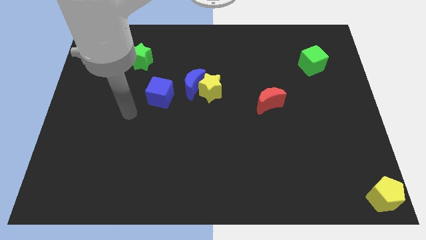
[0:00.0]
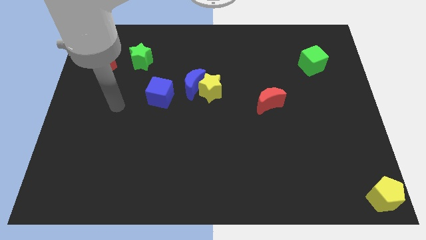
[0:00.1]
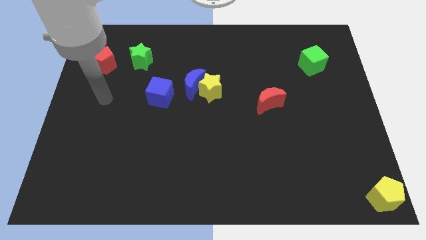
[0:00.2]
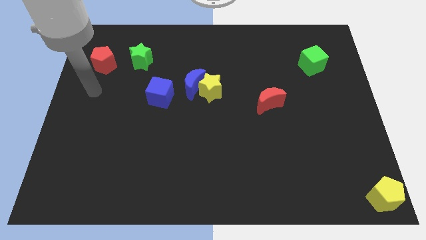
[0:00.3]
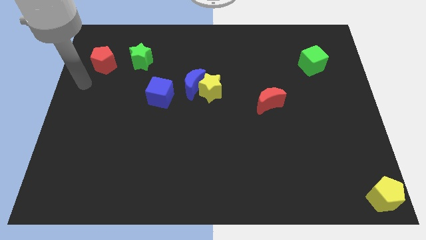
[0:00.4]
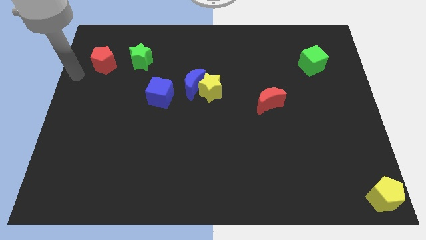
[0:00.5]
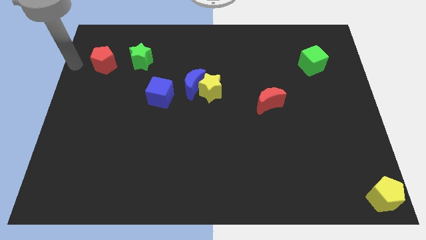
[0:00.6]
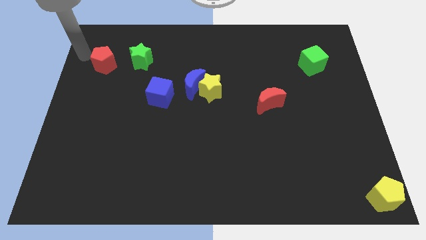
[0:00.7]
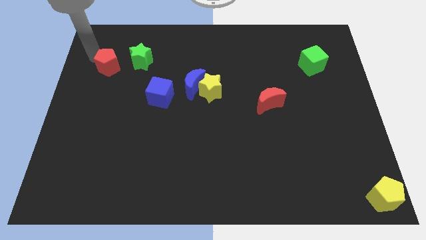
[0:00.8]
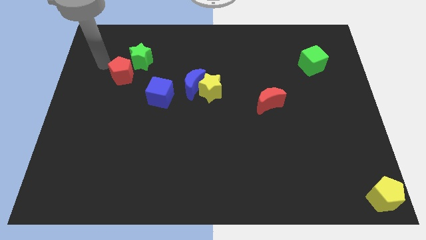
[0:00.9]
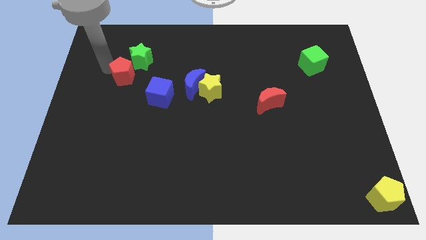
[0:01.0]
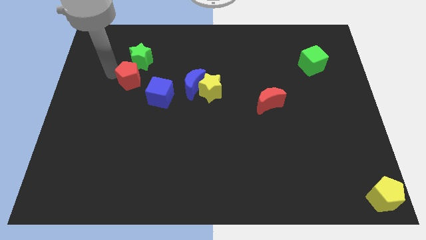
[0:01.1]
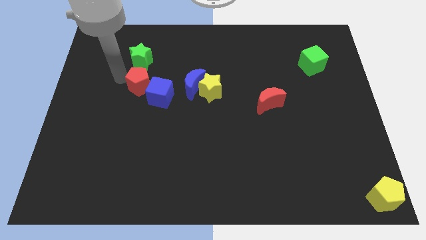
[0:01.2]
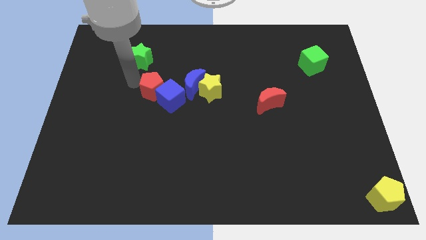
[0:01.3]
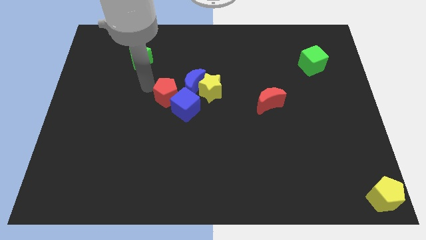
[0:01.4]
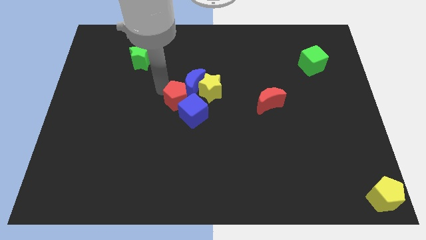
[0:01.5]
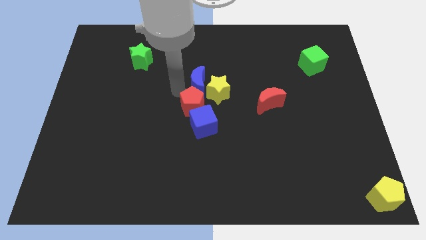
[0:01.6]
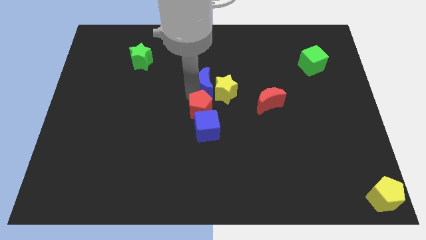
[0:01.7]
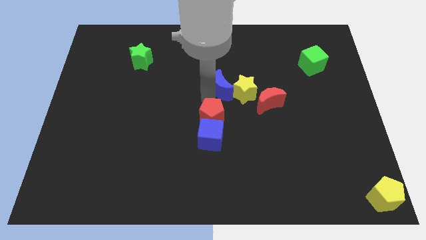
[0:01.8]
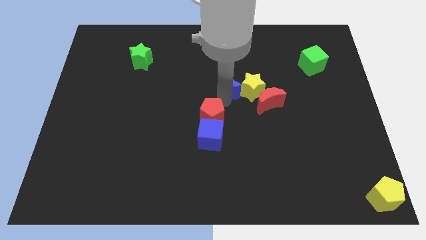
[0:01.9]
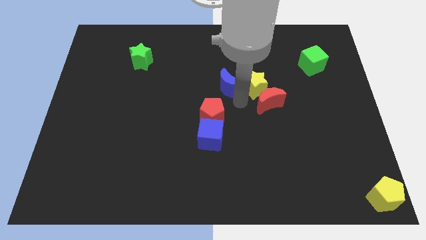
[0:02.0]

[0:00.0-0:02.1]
push the red pentagon and blue cube to the center

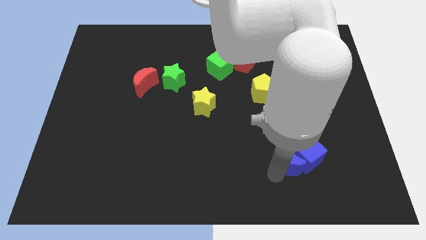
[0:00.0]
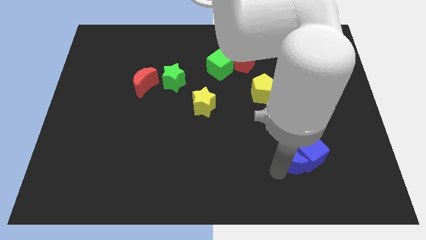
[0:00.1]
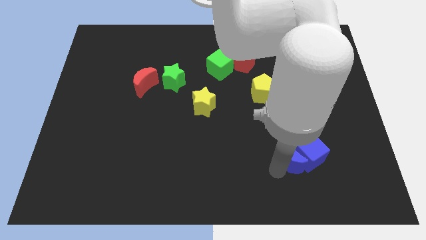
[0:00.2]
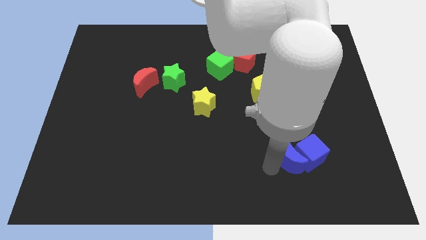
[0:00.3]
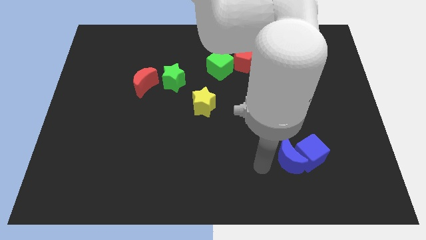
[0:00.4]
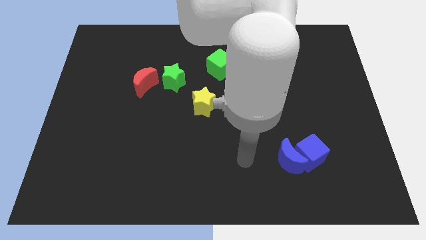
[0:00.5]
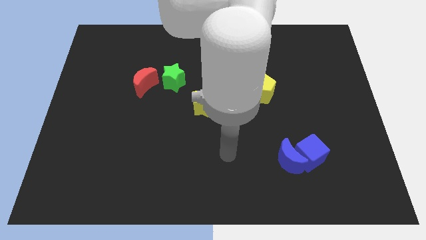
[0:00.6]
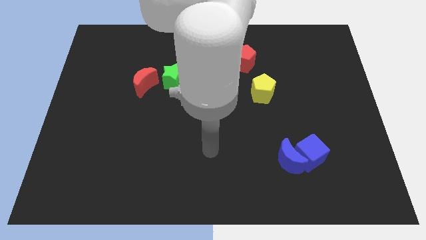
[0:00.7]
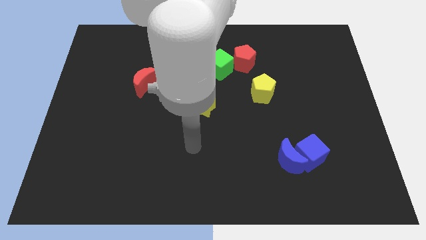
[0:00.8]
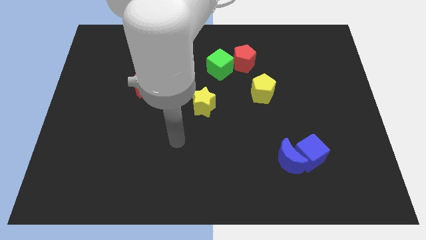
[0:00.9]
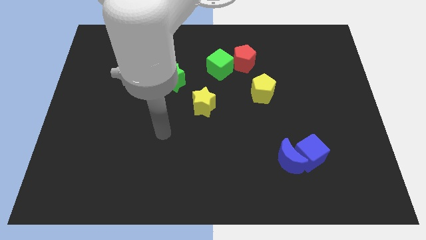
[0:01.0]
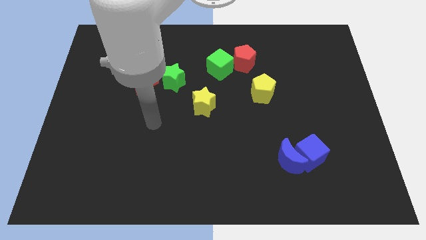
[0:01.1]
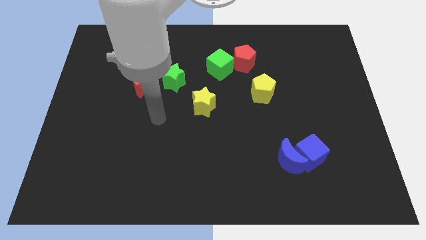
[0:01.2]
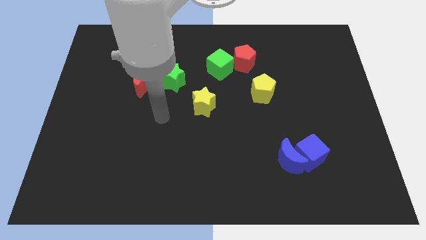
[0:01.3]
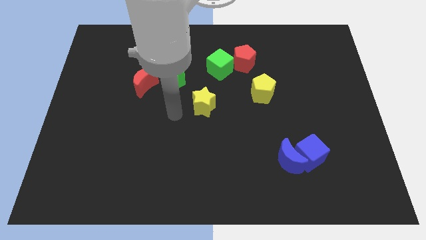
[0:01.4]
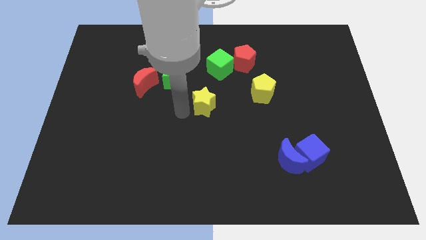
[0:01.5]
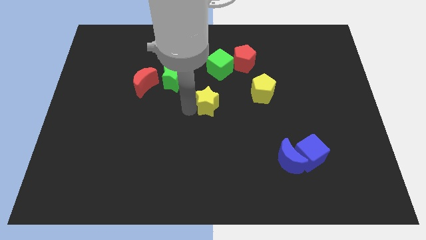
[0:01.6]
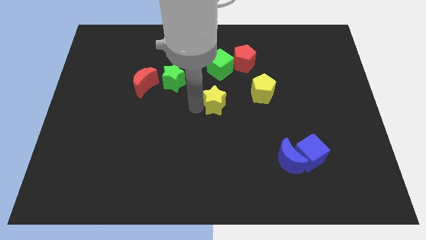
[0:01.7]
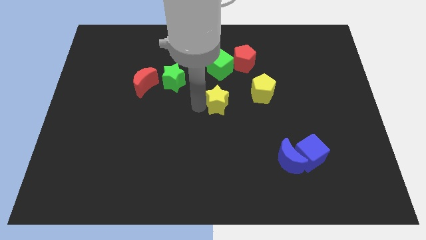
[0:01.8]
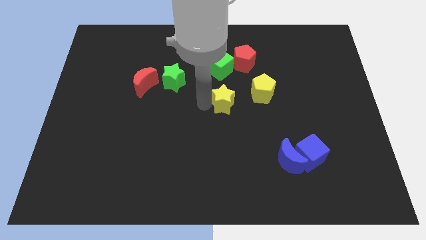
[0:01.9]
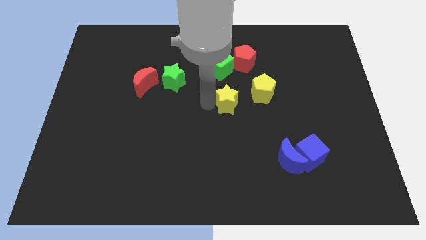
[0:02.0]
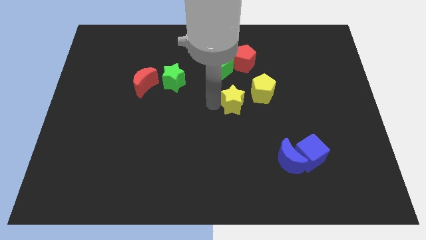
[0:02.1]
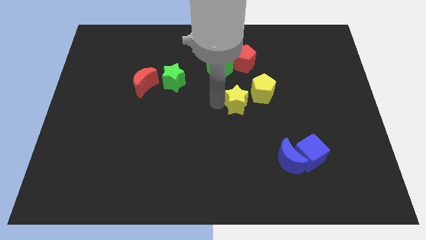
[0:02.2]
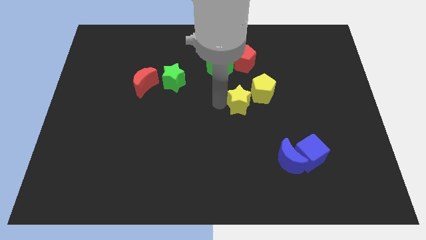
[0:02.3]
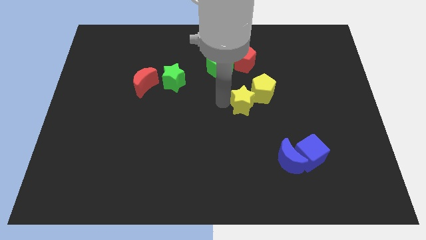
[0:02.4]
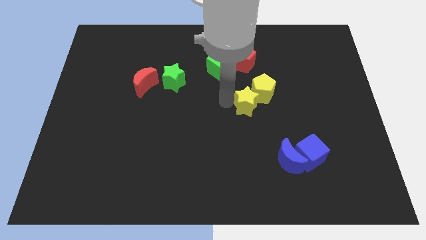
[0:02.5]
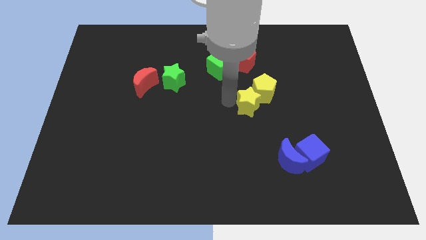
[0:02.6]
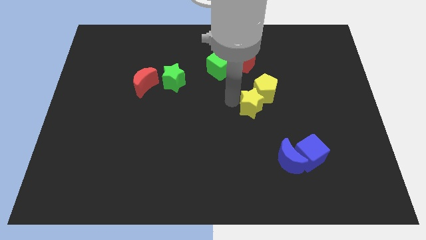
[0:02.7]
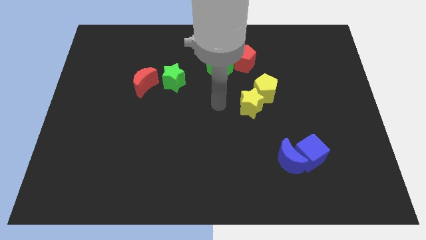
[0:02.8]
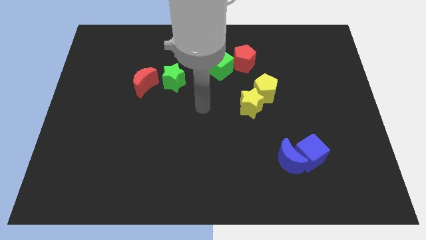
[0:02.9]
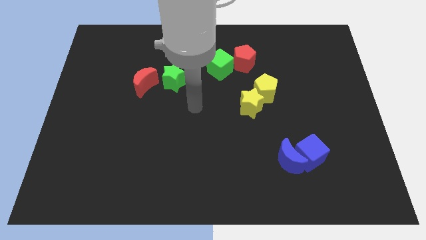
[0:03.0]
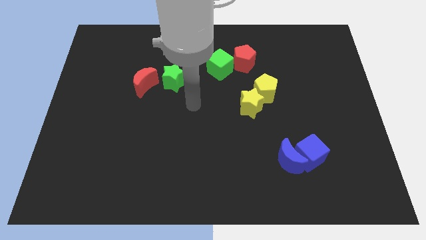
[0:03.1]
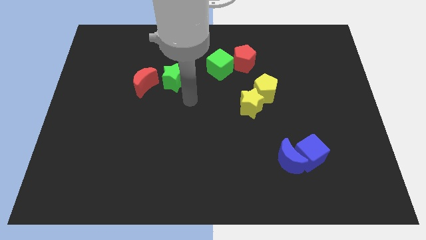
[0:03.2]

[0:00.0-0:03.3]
move the yellow star into the yellow pentagon

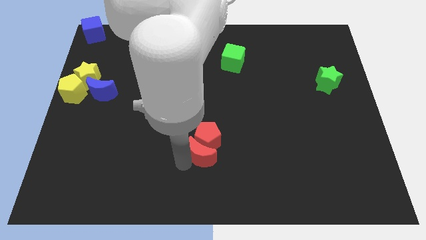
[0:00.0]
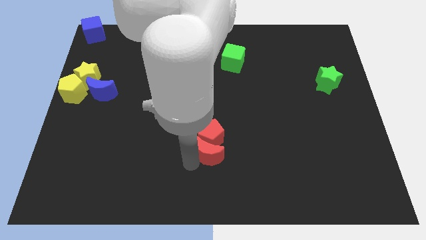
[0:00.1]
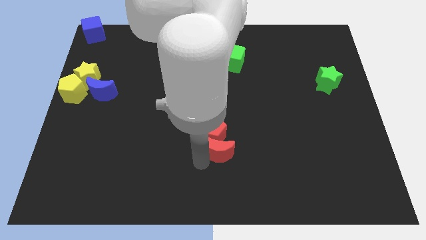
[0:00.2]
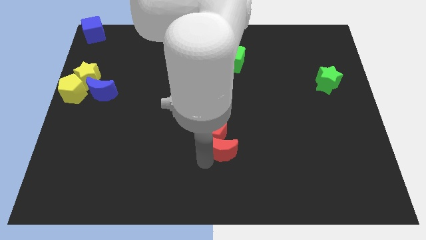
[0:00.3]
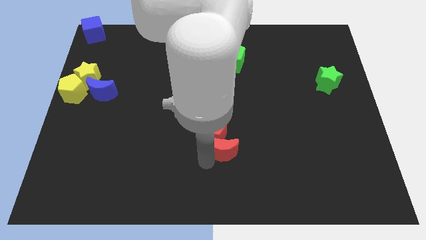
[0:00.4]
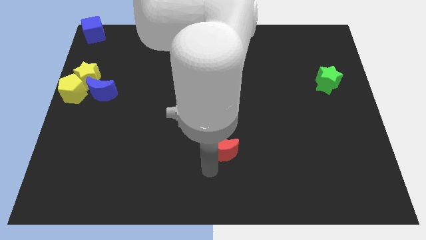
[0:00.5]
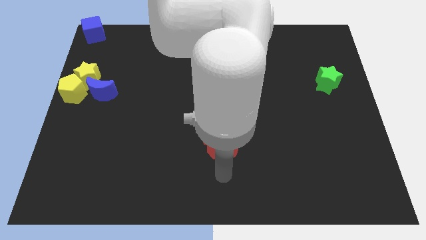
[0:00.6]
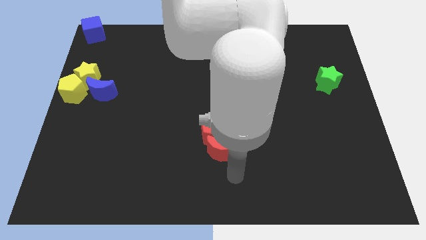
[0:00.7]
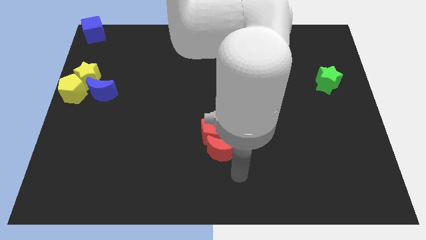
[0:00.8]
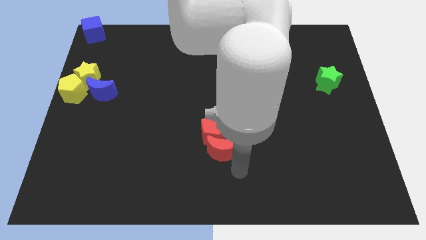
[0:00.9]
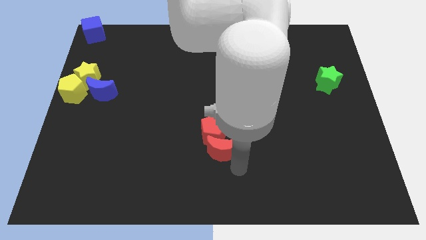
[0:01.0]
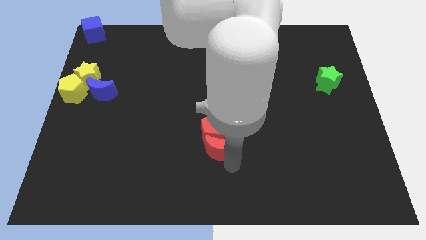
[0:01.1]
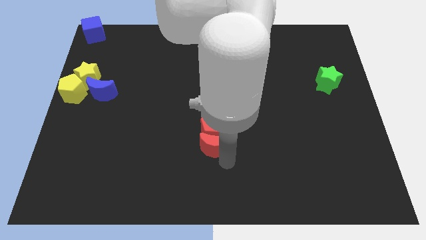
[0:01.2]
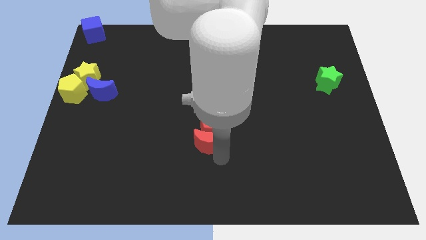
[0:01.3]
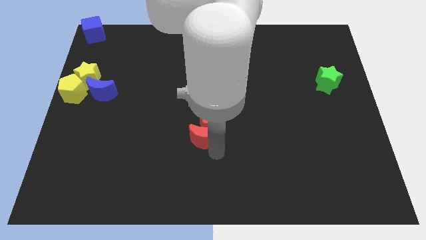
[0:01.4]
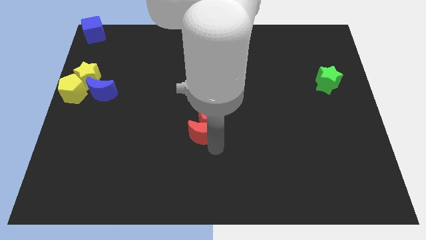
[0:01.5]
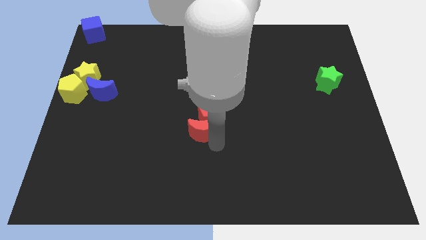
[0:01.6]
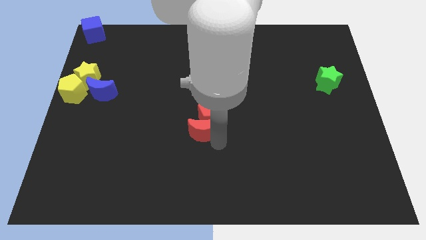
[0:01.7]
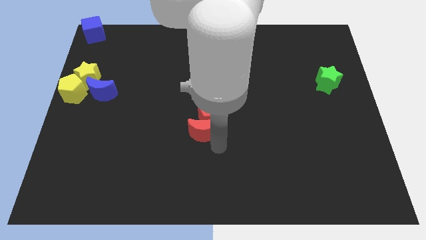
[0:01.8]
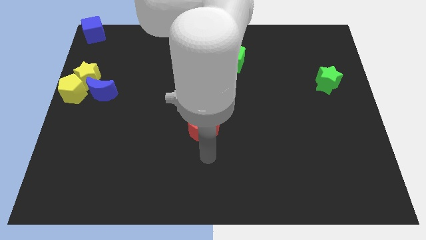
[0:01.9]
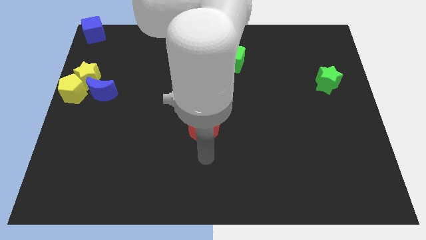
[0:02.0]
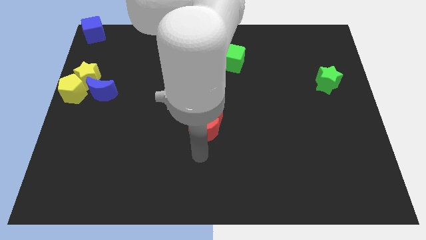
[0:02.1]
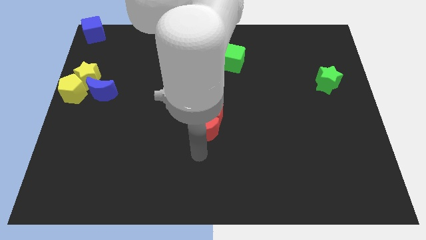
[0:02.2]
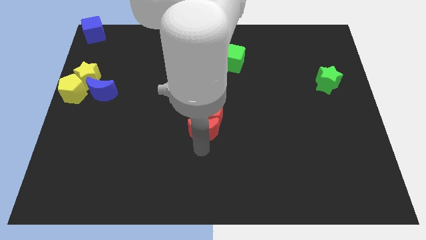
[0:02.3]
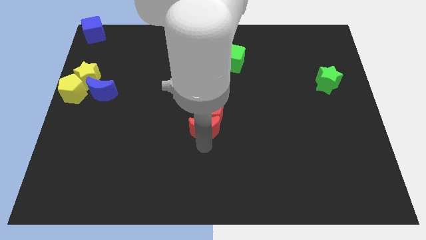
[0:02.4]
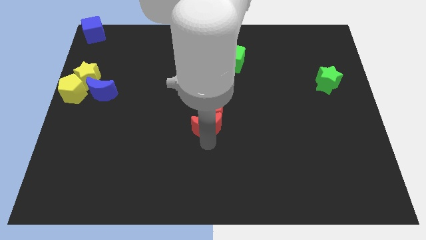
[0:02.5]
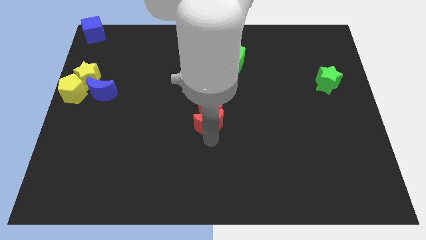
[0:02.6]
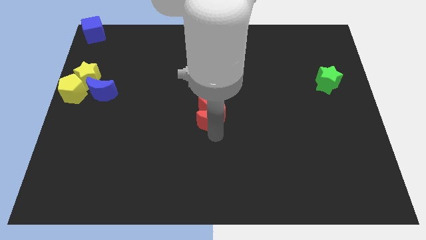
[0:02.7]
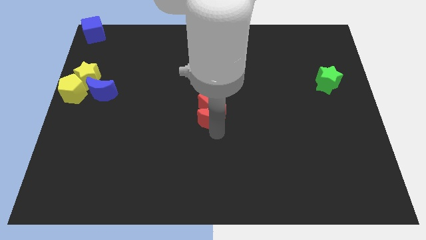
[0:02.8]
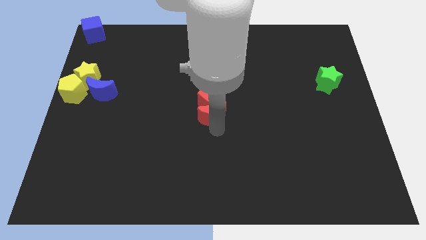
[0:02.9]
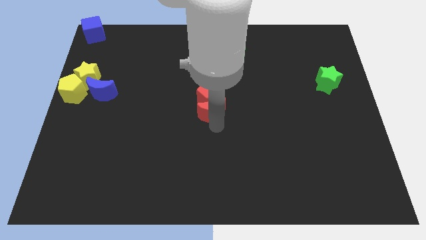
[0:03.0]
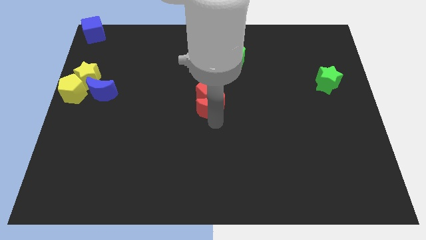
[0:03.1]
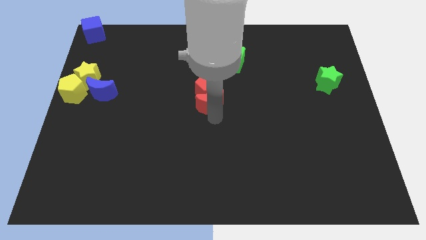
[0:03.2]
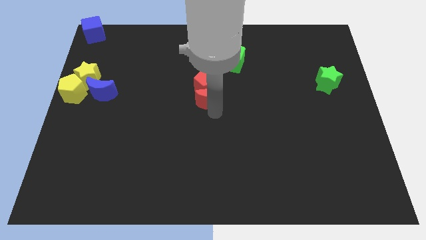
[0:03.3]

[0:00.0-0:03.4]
move the red blocks at the center of the board
